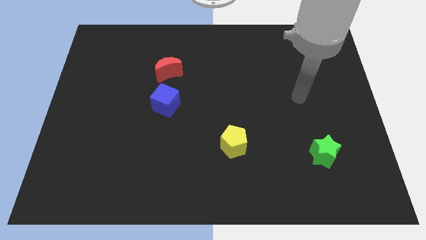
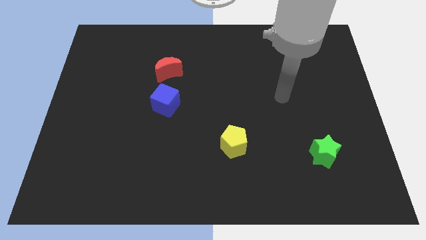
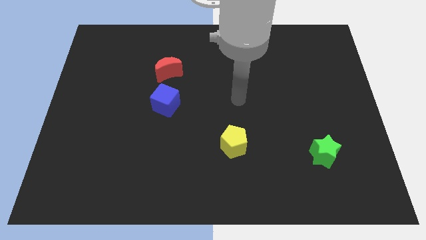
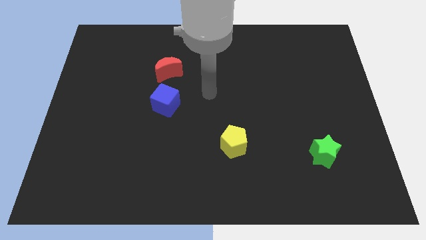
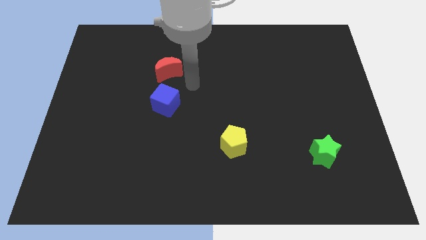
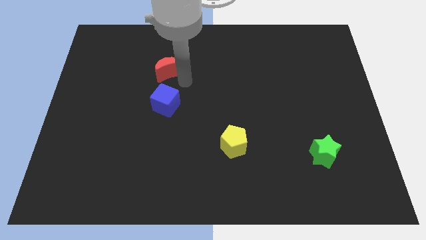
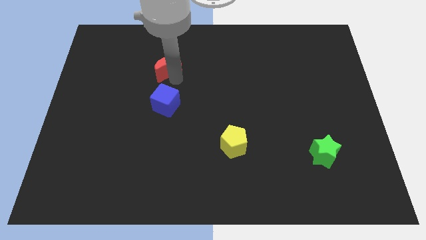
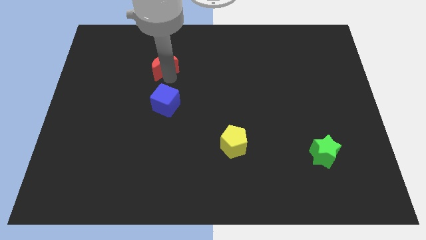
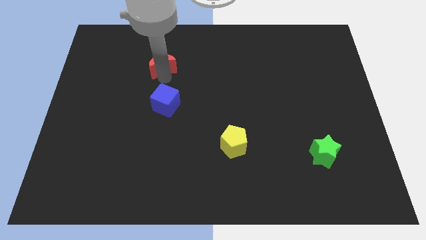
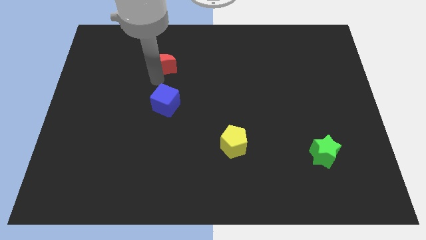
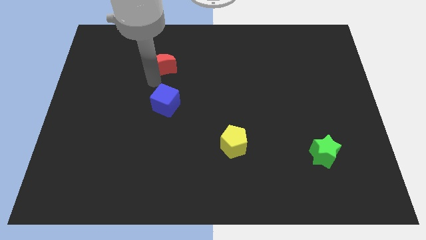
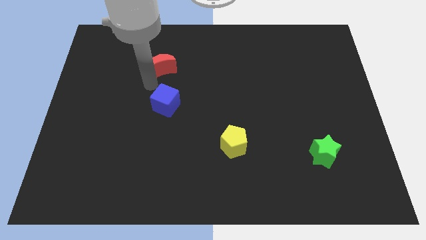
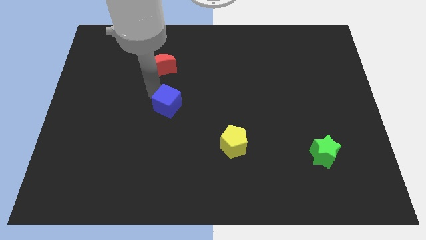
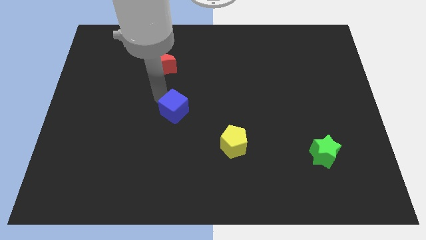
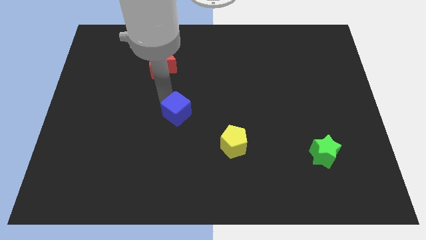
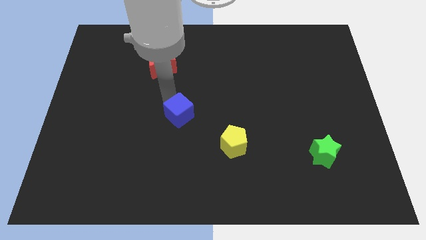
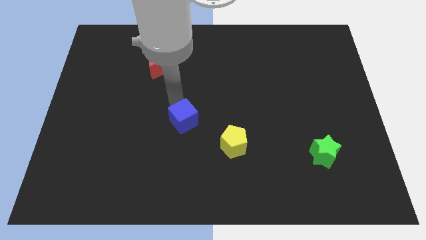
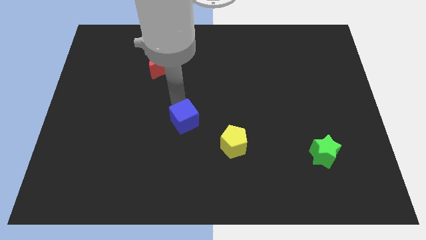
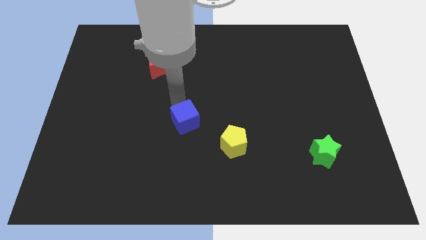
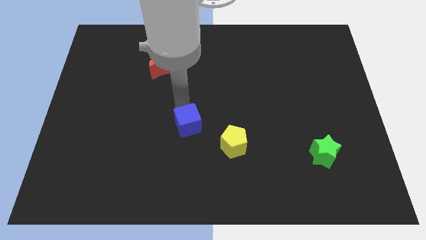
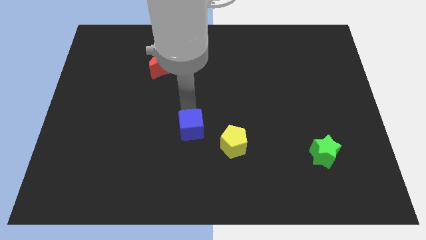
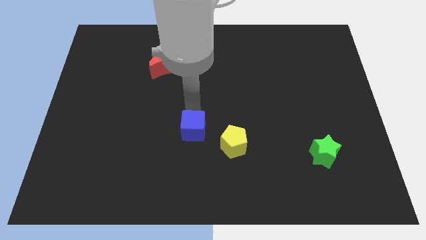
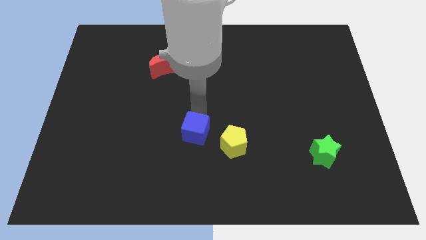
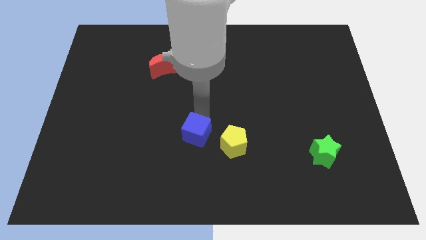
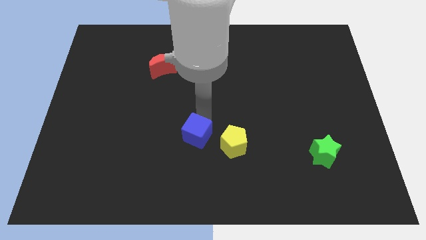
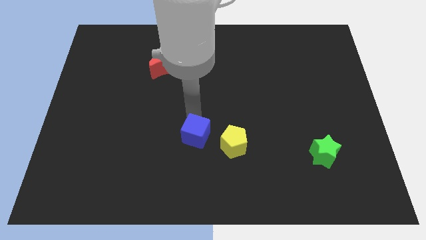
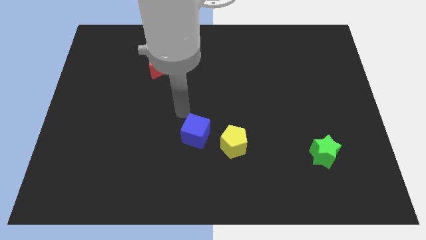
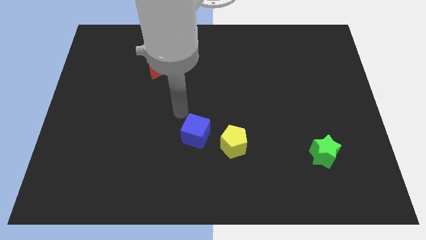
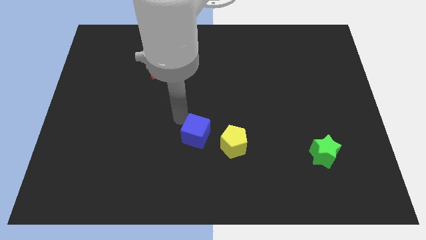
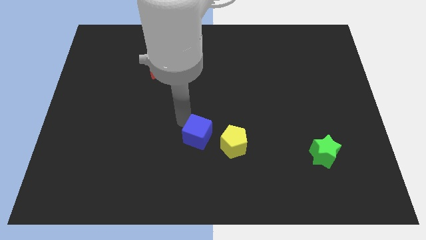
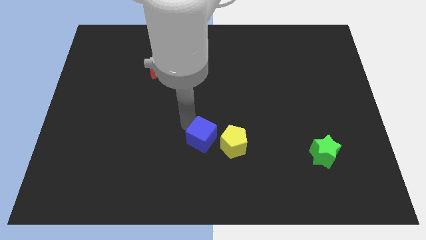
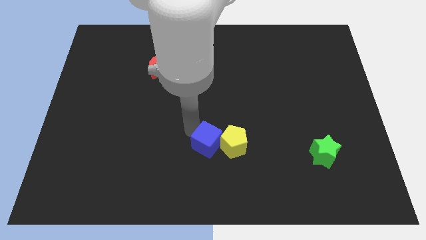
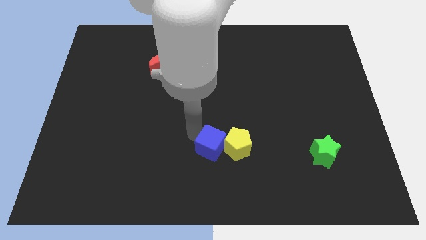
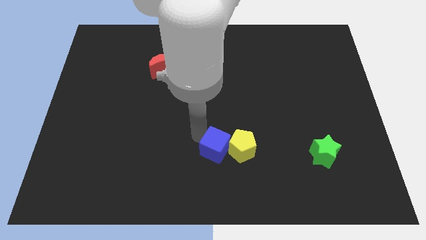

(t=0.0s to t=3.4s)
move the blue block to the yellow pentagon

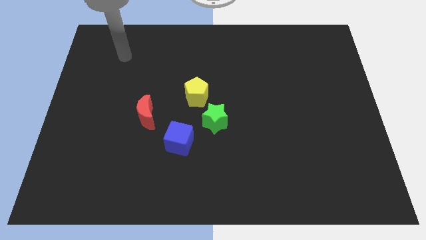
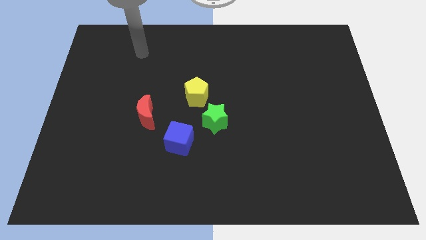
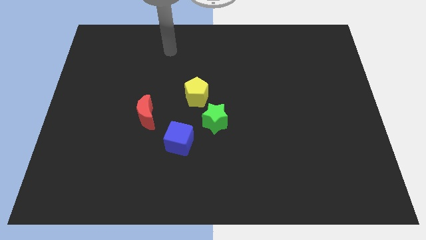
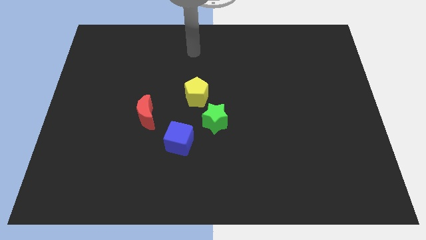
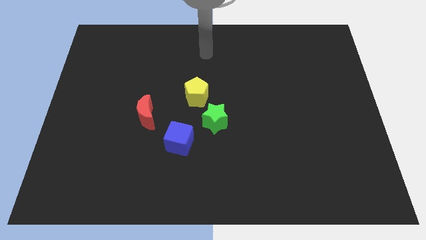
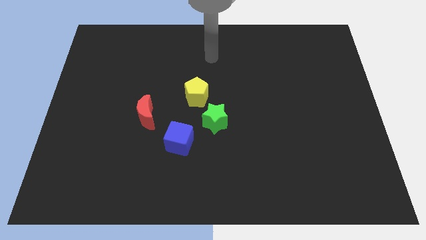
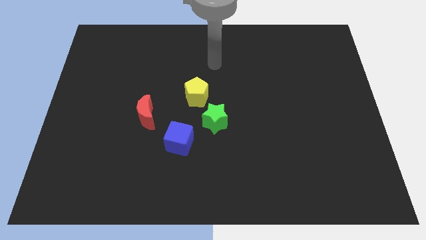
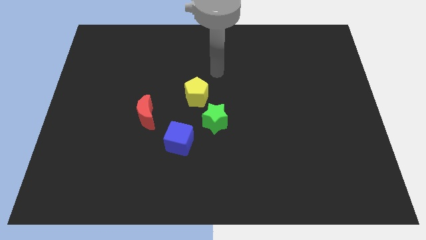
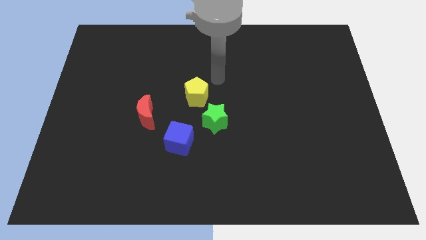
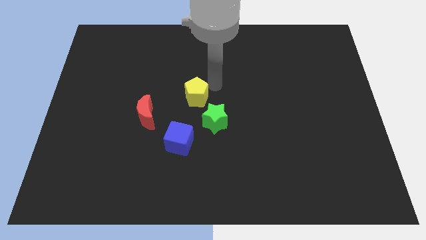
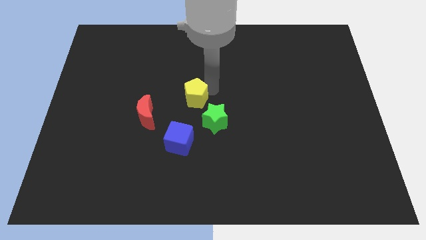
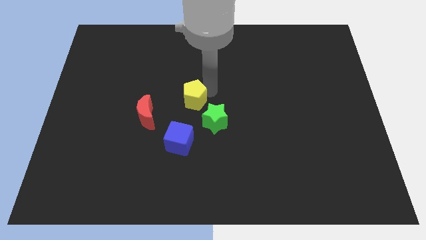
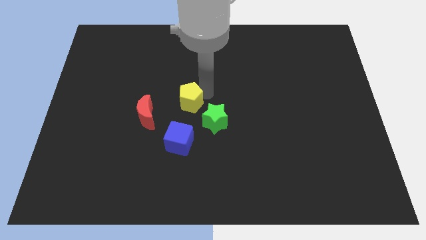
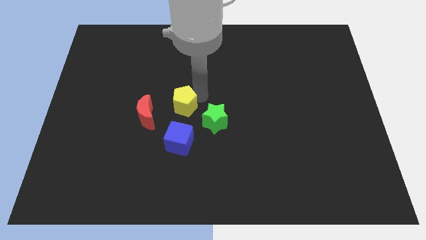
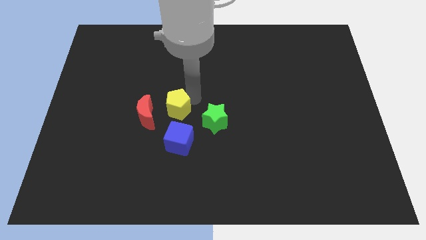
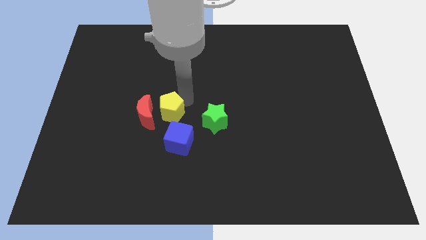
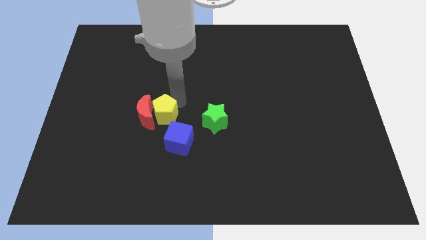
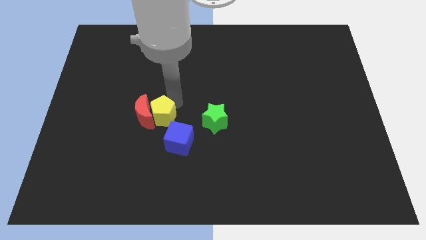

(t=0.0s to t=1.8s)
push the yellow block close to the red block

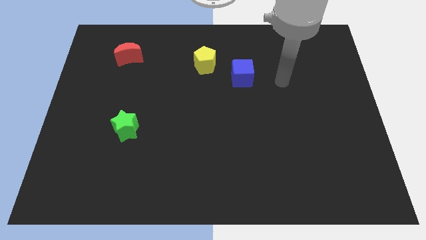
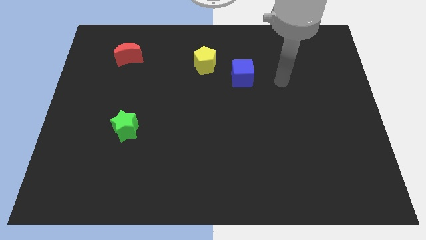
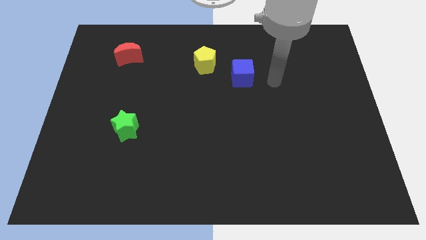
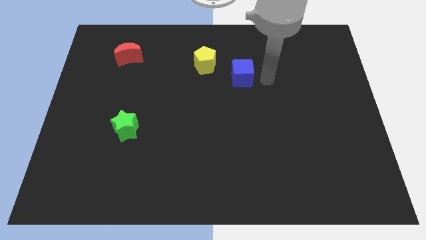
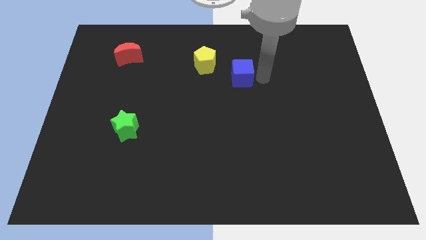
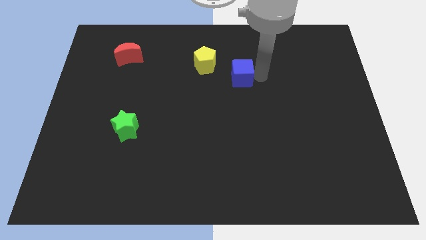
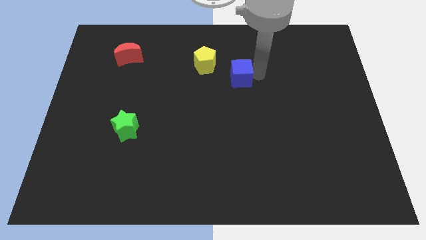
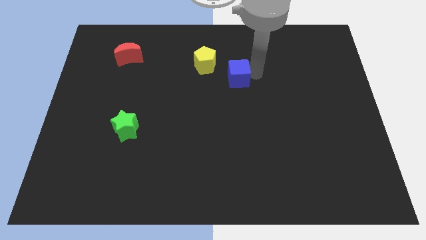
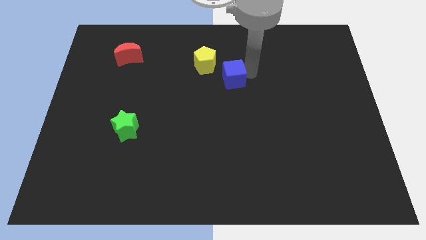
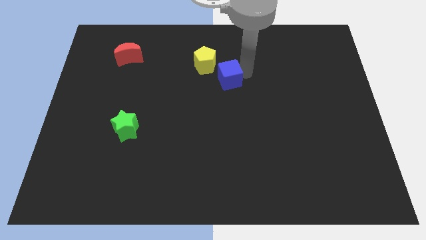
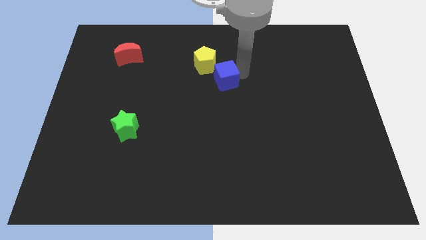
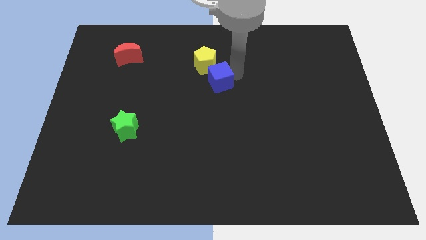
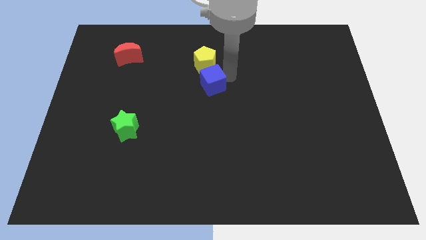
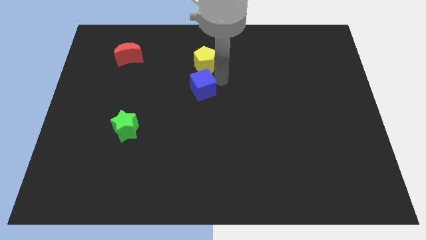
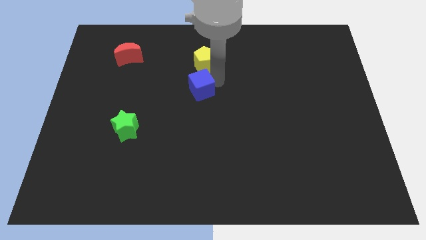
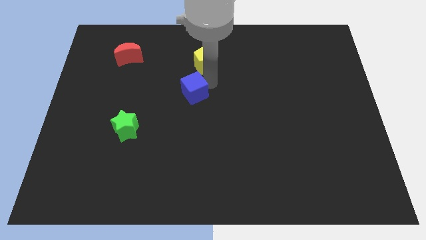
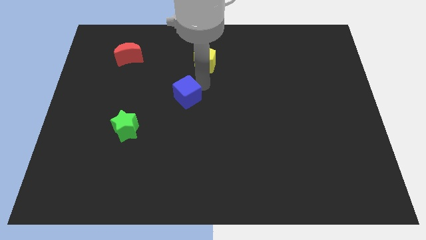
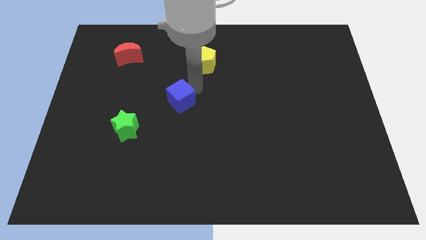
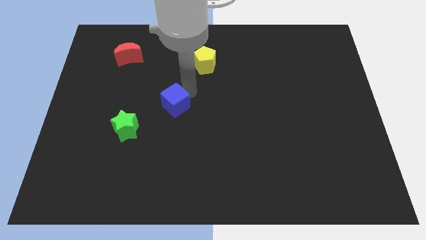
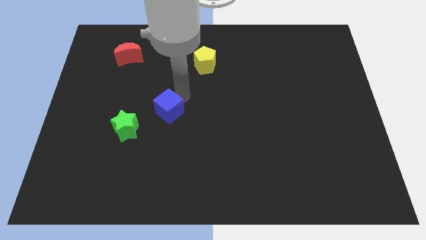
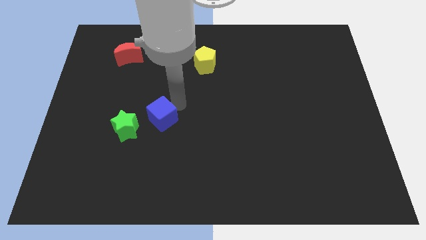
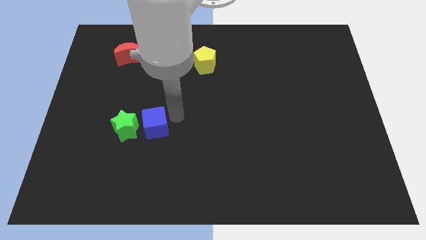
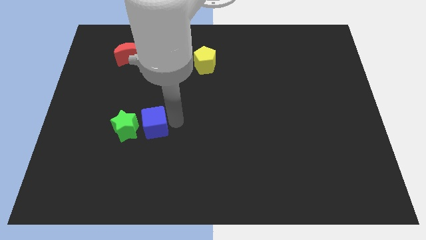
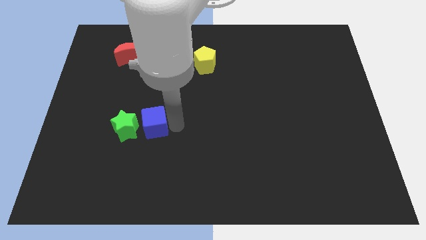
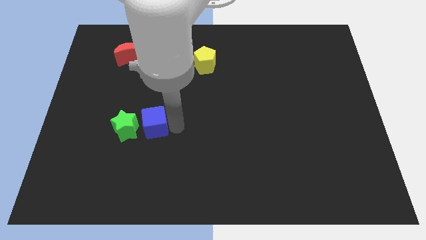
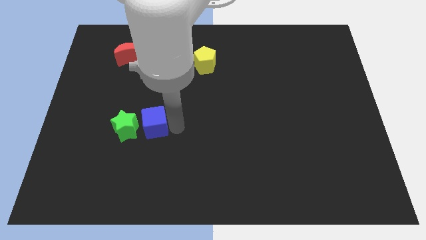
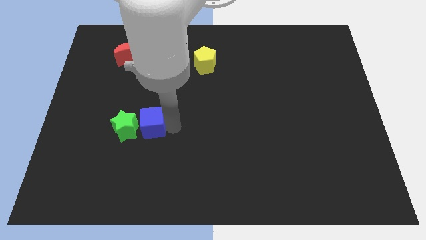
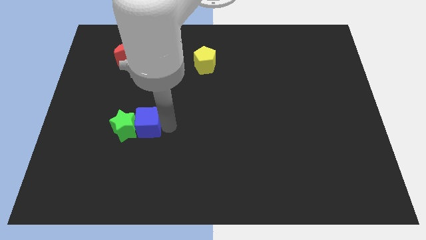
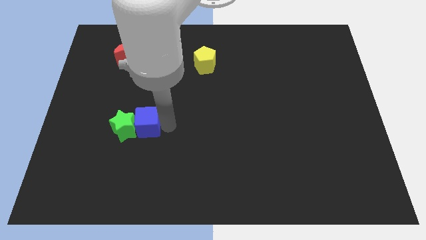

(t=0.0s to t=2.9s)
put the cube towards the green block
